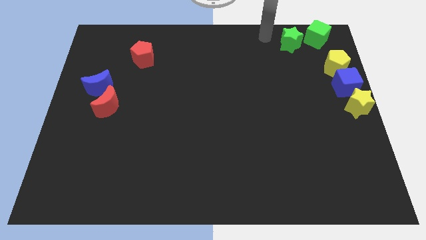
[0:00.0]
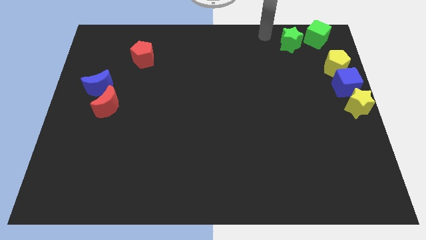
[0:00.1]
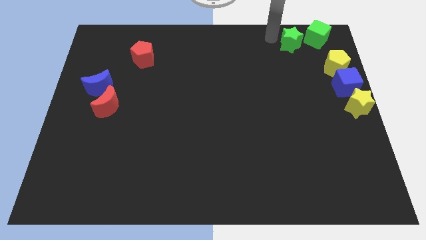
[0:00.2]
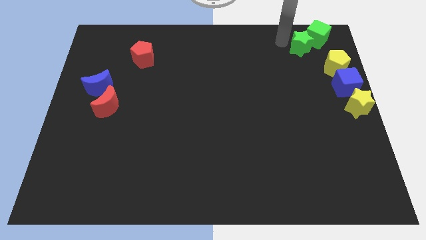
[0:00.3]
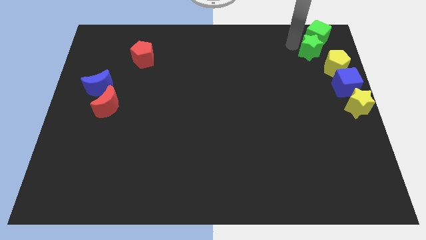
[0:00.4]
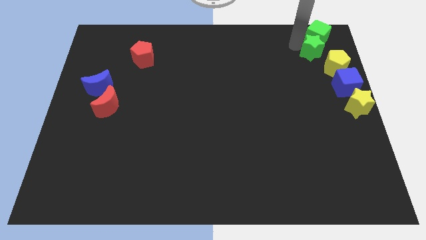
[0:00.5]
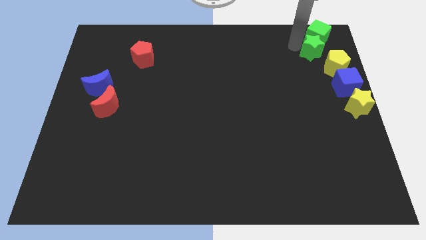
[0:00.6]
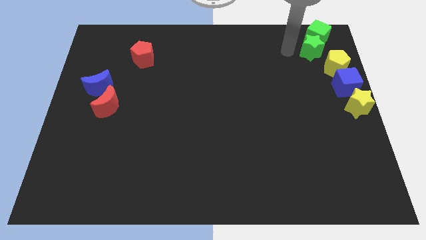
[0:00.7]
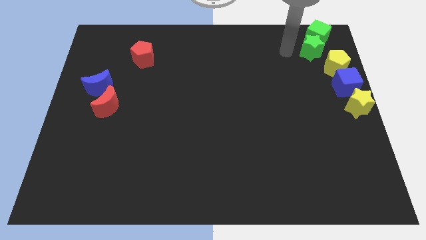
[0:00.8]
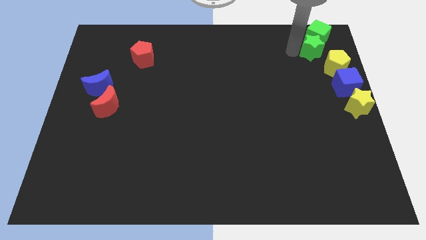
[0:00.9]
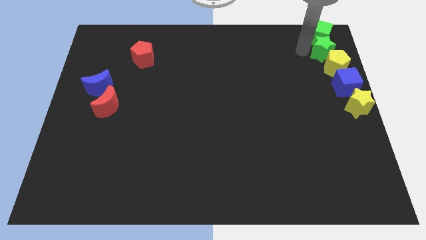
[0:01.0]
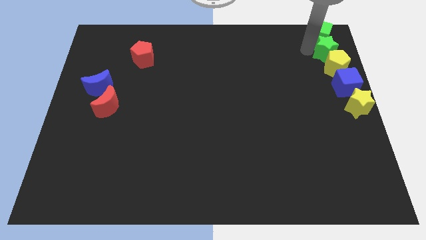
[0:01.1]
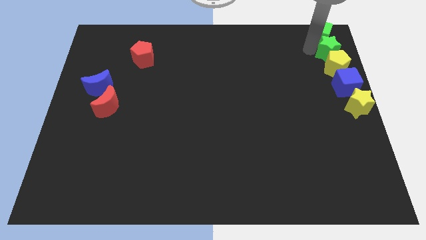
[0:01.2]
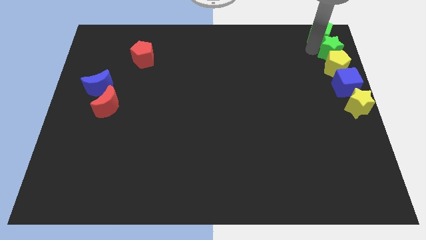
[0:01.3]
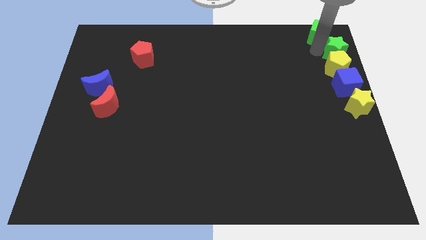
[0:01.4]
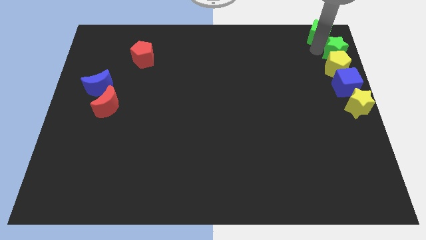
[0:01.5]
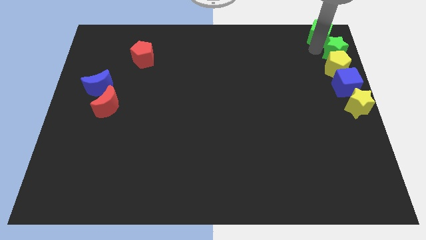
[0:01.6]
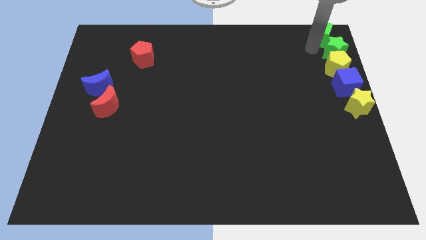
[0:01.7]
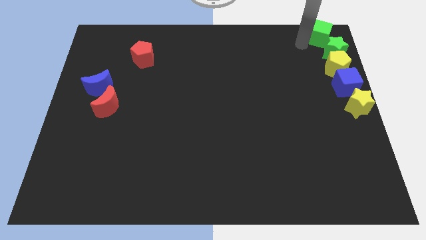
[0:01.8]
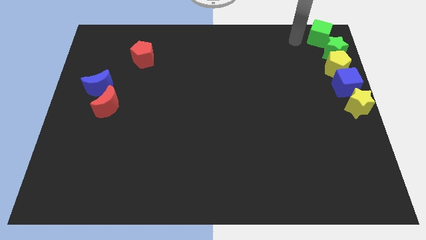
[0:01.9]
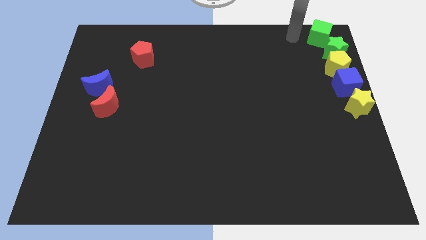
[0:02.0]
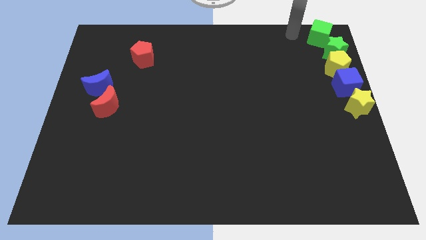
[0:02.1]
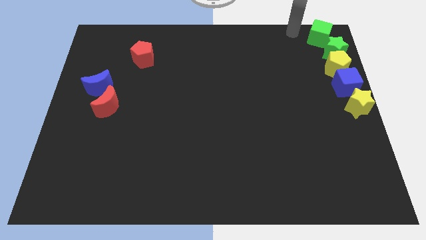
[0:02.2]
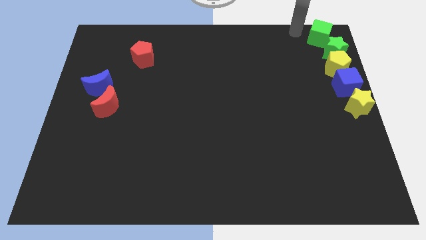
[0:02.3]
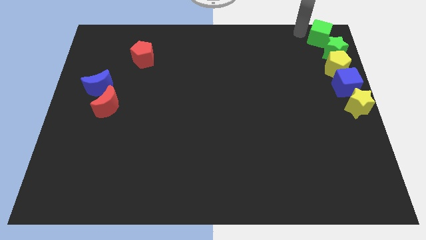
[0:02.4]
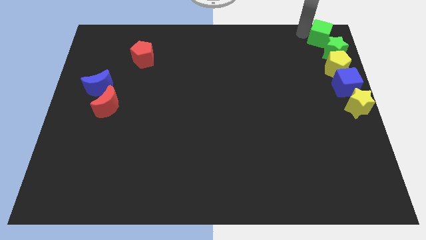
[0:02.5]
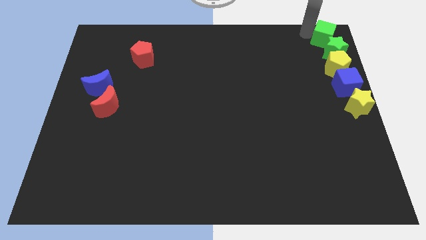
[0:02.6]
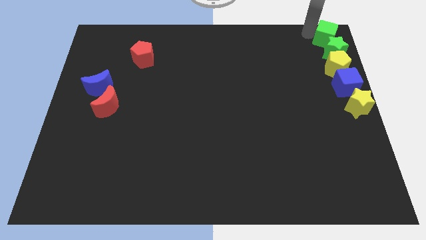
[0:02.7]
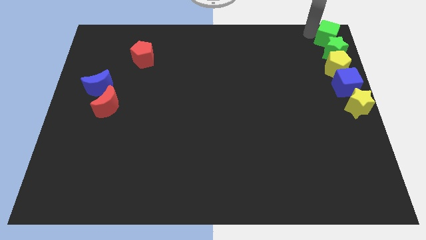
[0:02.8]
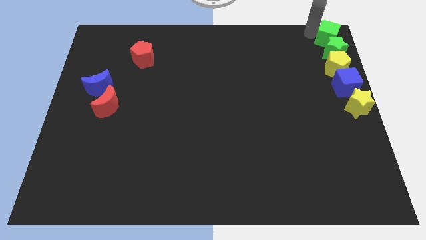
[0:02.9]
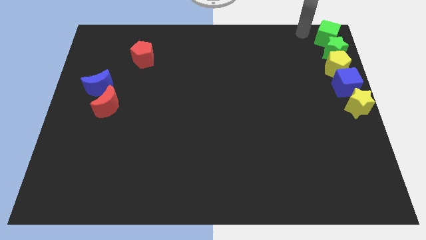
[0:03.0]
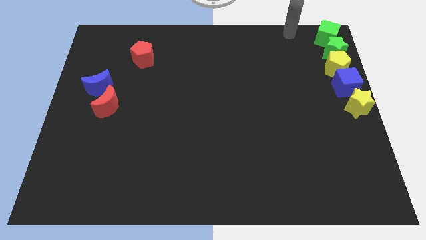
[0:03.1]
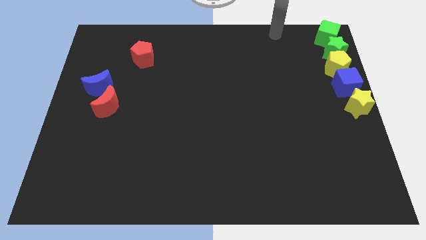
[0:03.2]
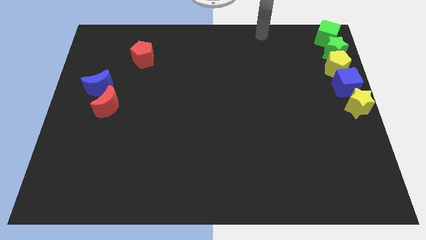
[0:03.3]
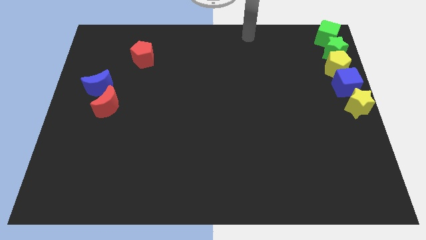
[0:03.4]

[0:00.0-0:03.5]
place the green blocks above the yellow pentagon

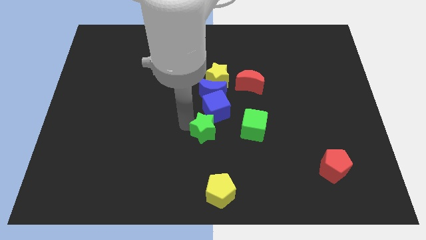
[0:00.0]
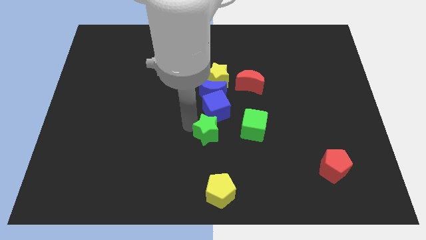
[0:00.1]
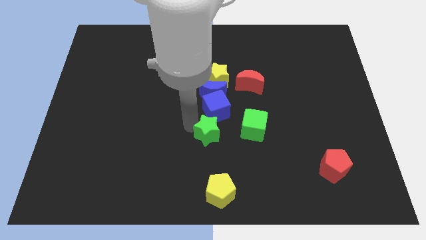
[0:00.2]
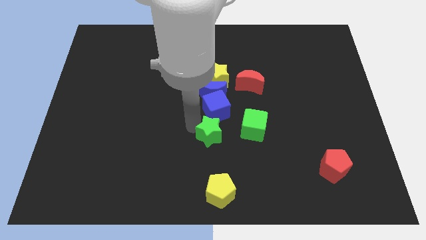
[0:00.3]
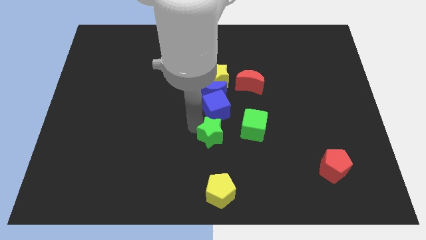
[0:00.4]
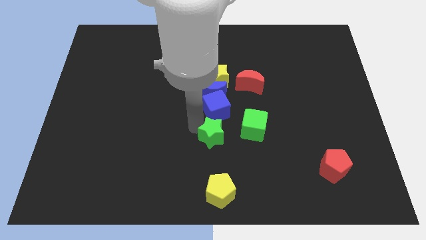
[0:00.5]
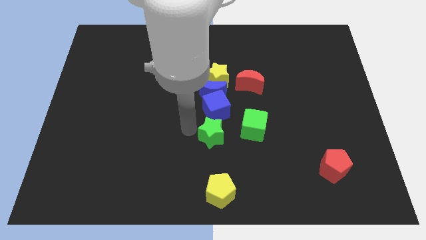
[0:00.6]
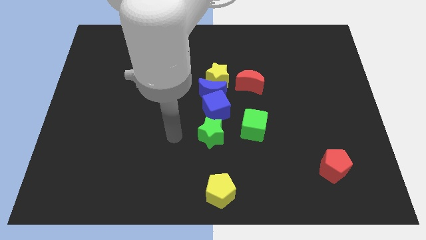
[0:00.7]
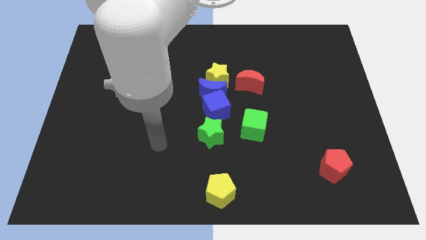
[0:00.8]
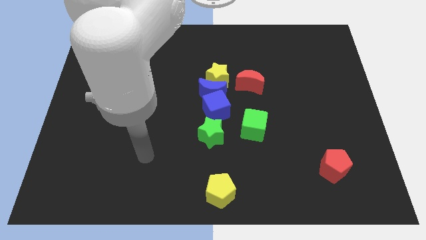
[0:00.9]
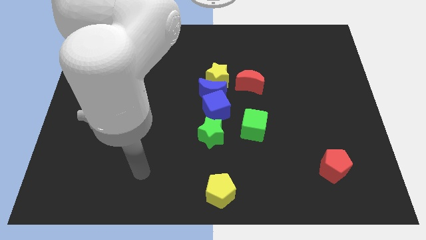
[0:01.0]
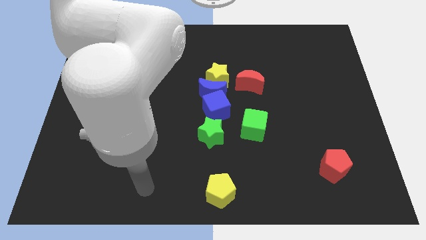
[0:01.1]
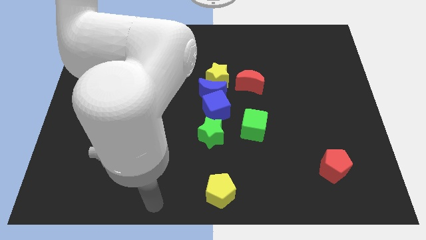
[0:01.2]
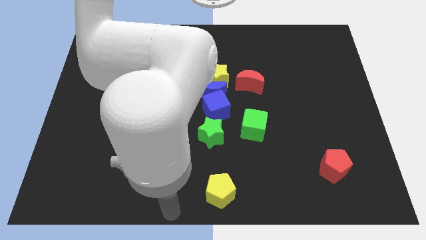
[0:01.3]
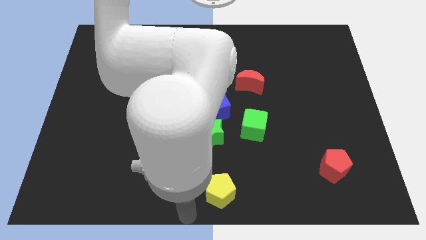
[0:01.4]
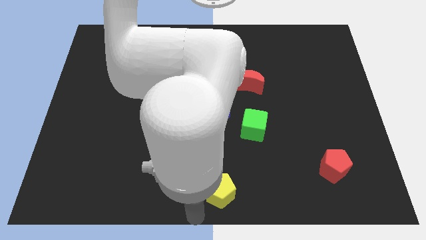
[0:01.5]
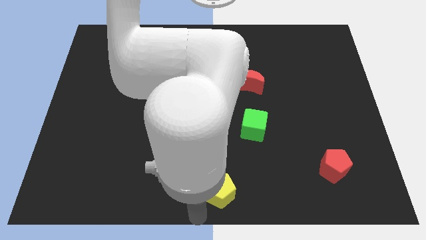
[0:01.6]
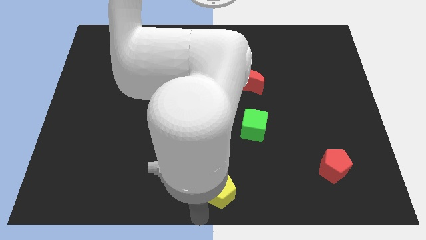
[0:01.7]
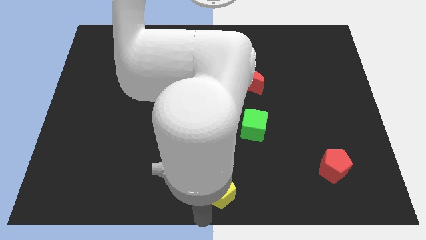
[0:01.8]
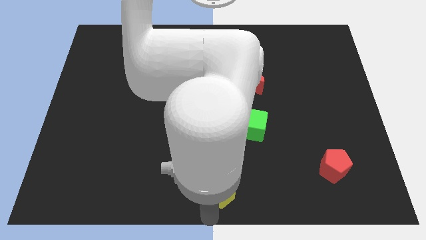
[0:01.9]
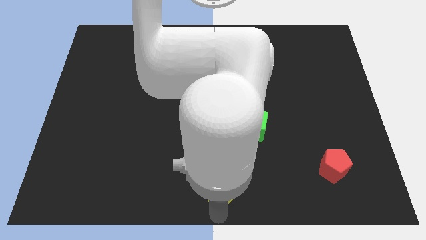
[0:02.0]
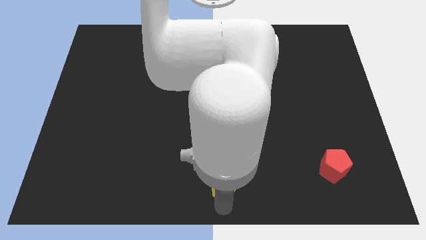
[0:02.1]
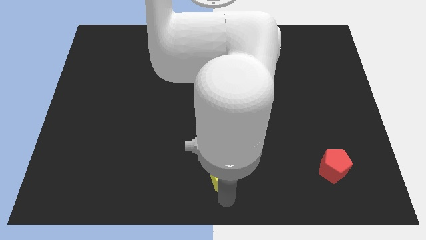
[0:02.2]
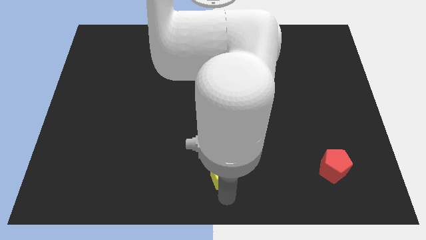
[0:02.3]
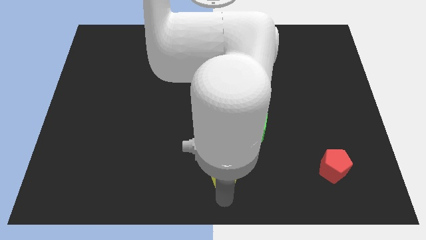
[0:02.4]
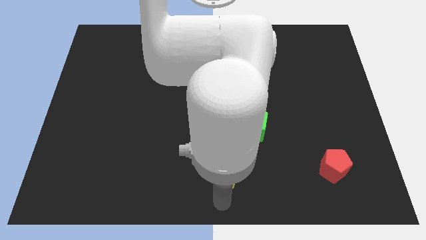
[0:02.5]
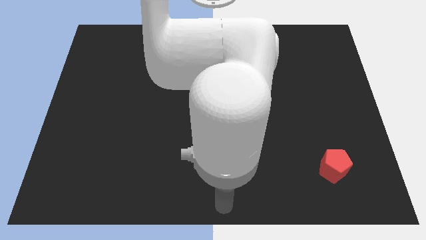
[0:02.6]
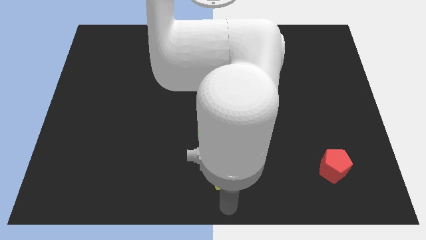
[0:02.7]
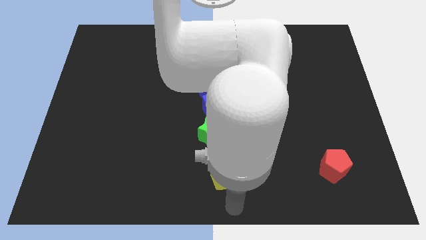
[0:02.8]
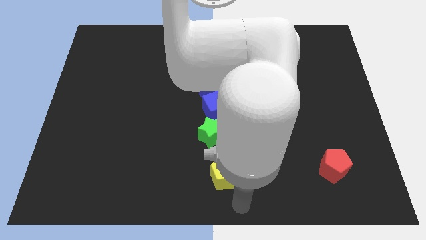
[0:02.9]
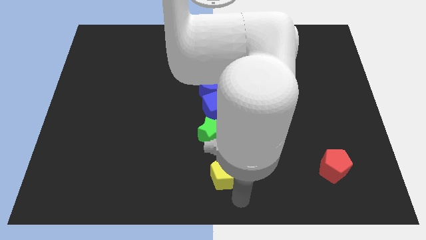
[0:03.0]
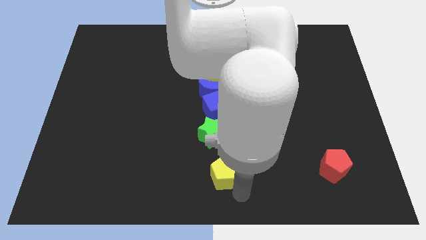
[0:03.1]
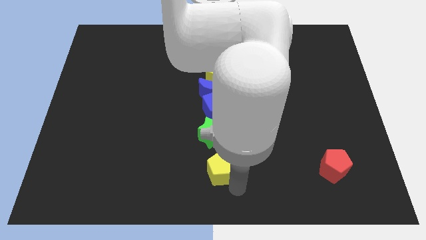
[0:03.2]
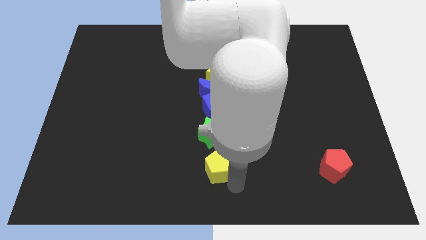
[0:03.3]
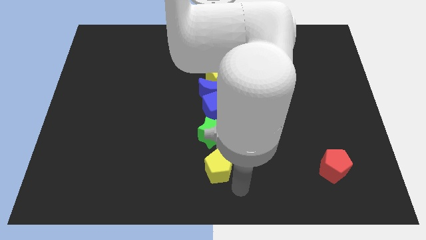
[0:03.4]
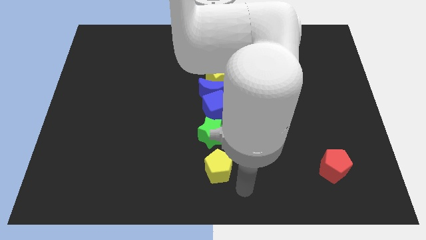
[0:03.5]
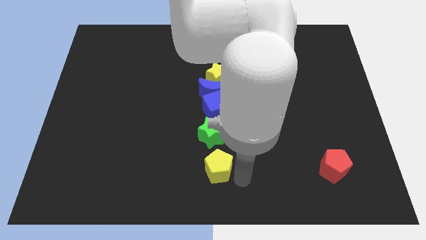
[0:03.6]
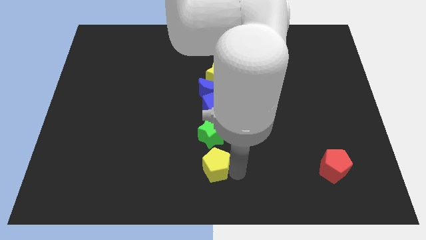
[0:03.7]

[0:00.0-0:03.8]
push the yellow pentagon slightly to the top

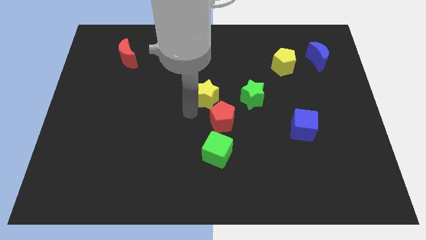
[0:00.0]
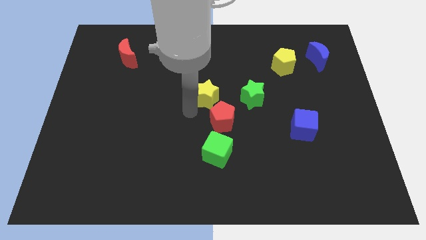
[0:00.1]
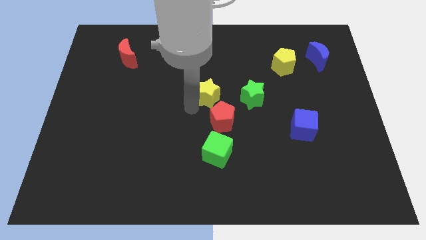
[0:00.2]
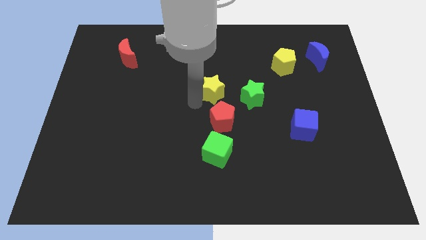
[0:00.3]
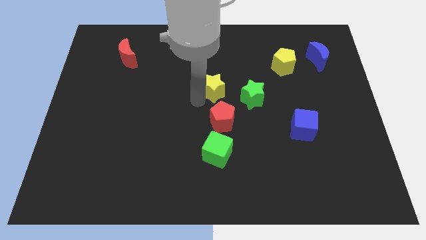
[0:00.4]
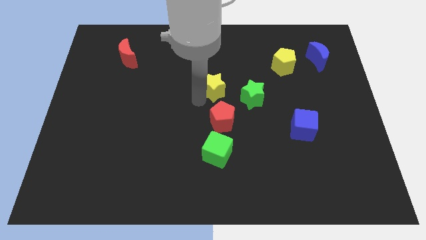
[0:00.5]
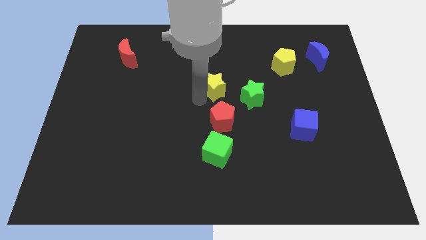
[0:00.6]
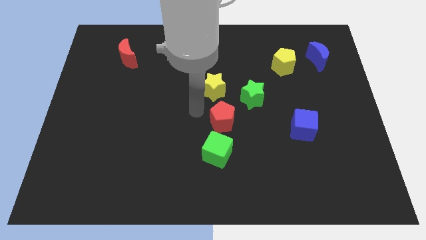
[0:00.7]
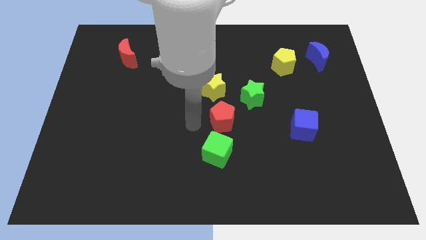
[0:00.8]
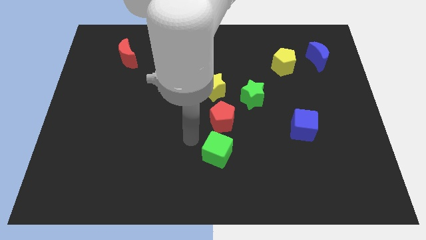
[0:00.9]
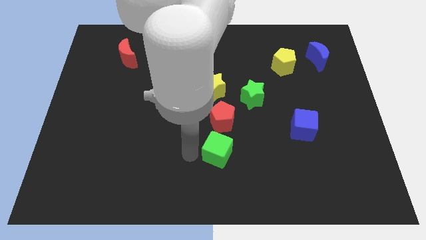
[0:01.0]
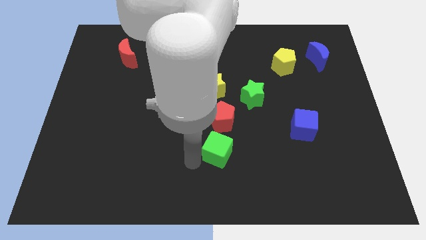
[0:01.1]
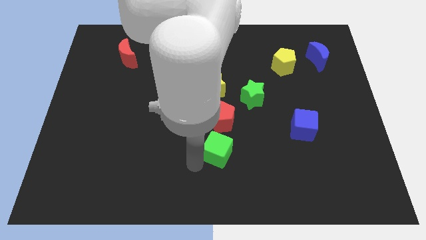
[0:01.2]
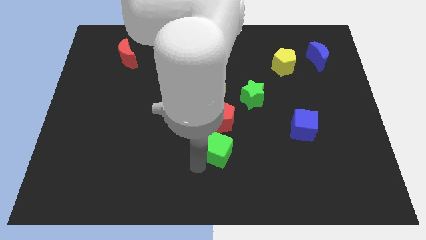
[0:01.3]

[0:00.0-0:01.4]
move yellow star to the top of red pentagon

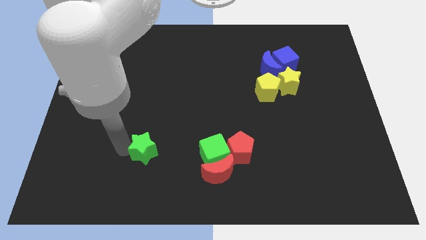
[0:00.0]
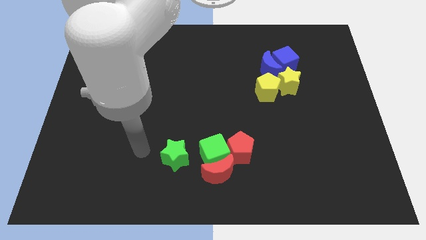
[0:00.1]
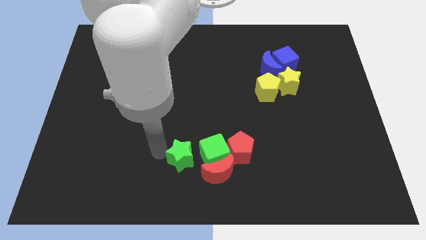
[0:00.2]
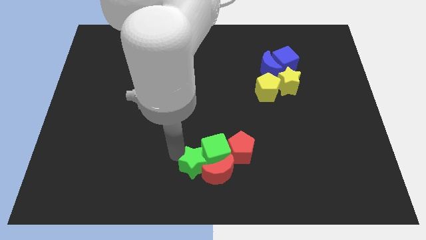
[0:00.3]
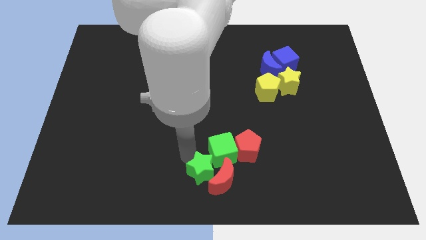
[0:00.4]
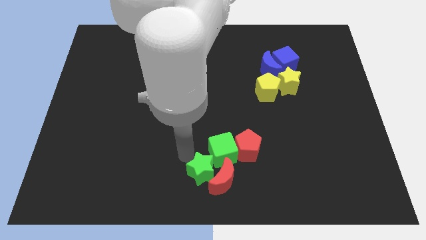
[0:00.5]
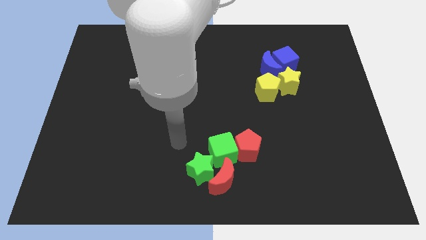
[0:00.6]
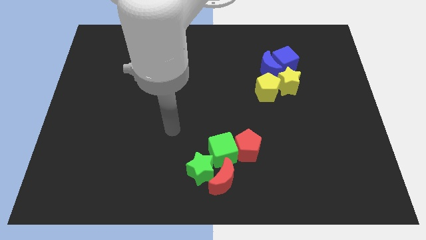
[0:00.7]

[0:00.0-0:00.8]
push the green star into the red moon
